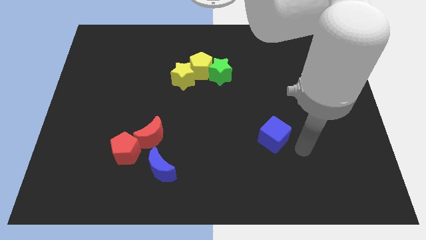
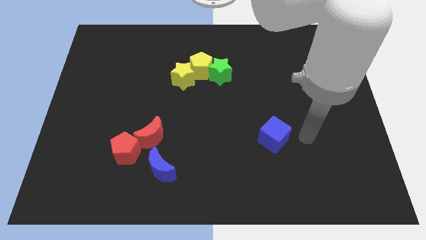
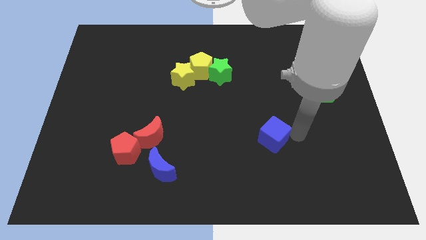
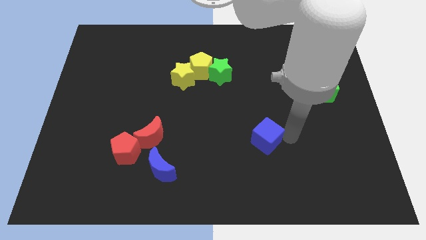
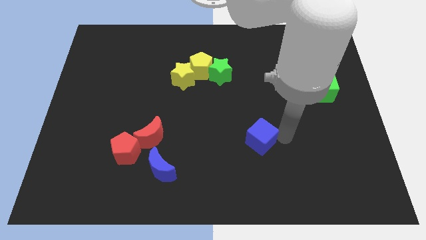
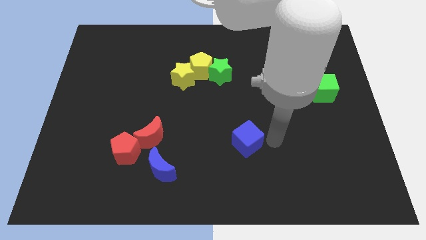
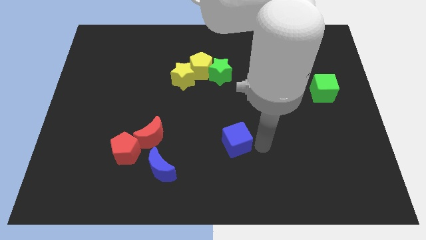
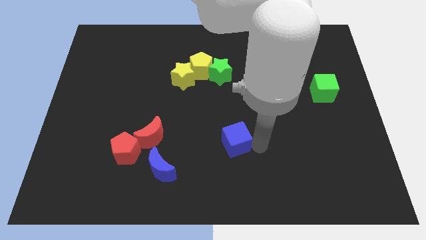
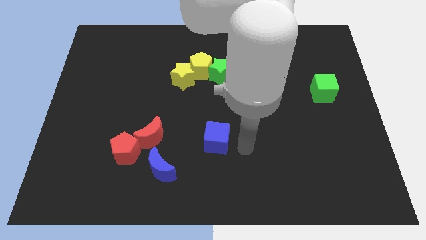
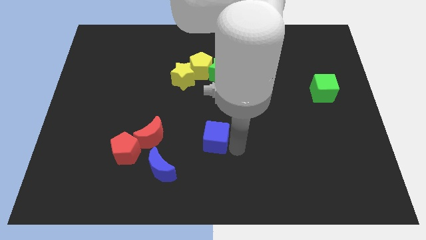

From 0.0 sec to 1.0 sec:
move the blue cube to the bottom of the green star

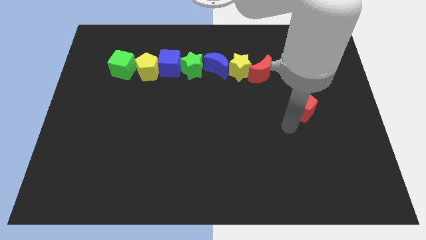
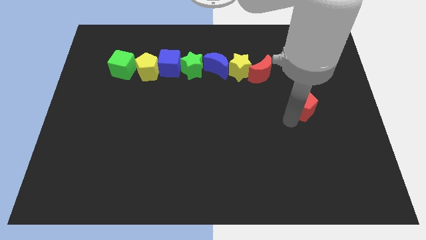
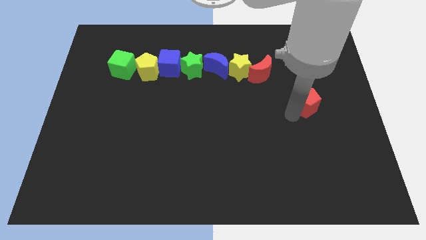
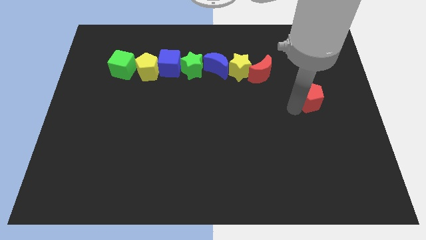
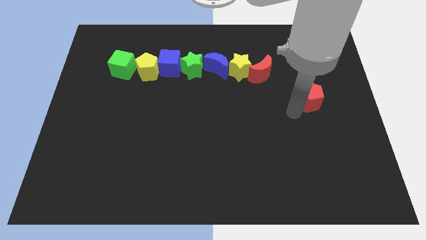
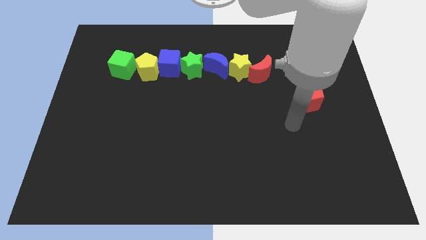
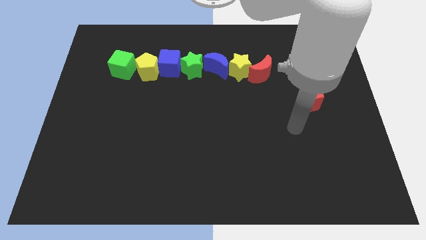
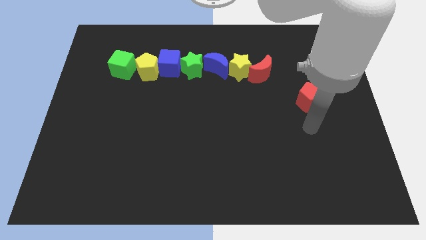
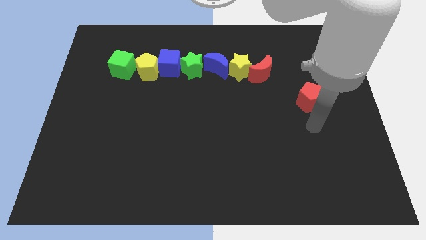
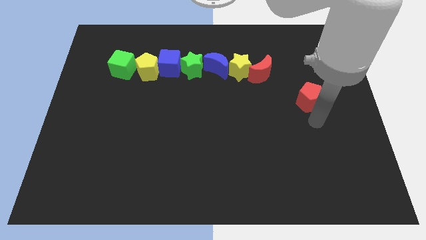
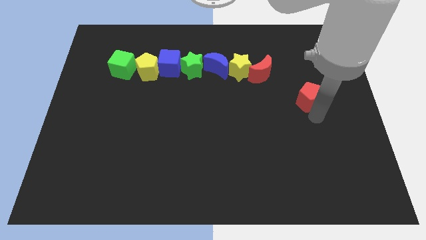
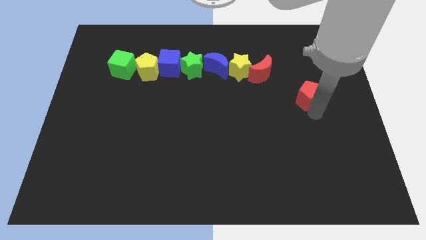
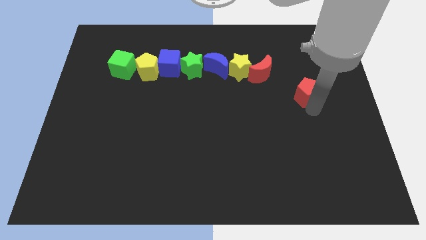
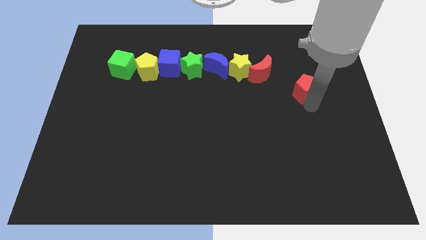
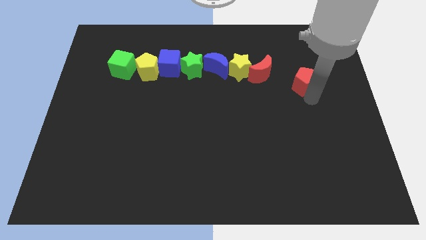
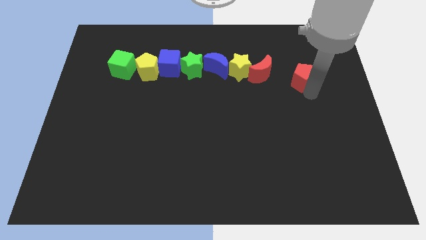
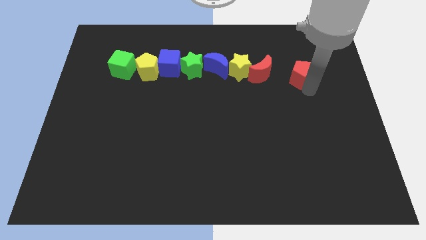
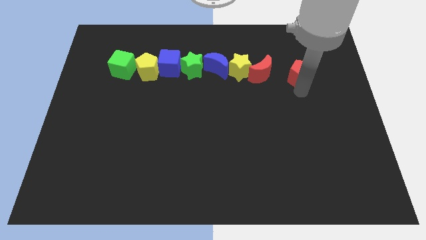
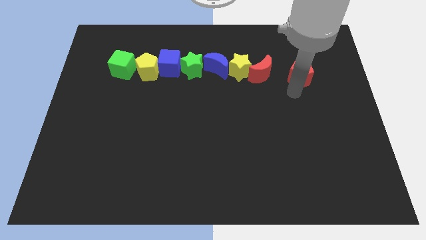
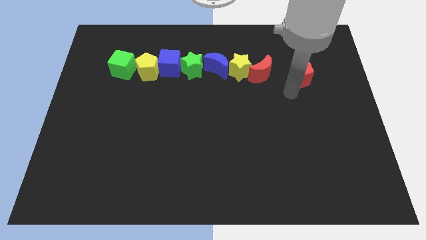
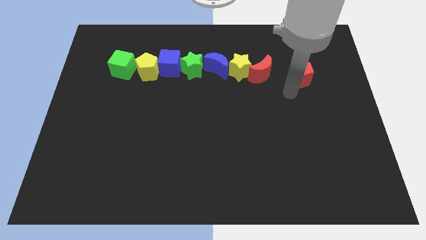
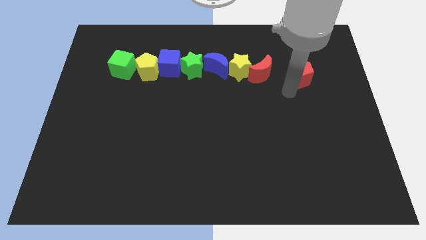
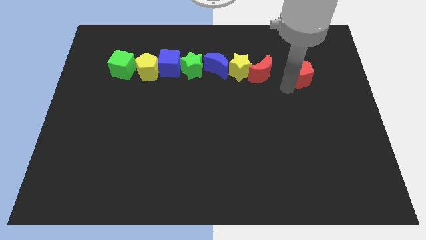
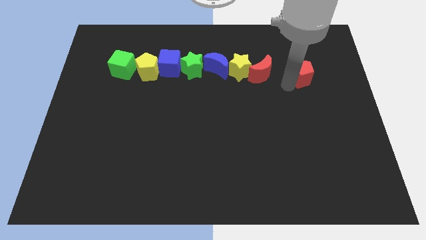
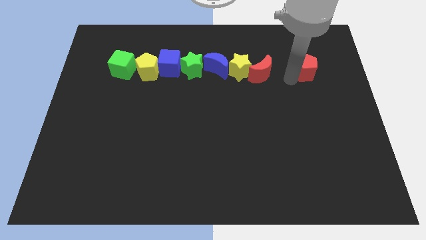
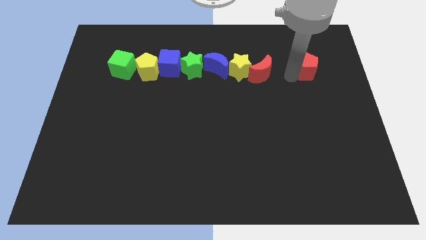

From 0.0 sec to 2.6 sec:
place the red pentagon right to the red moon

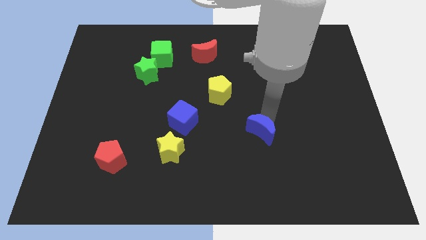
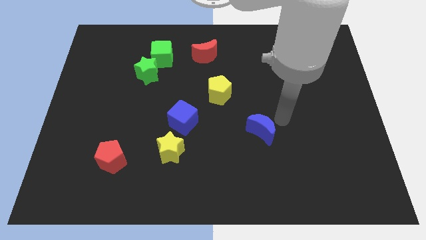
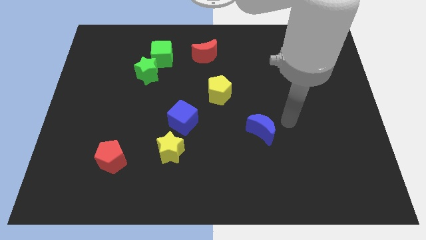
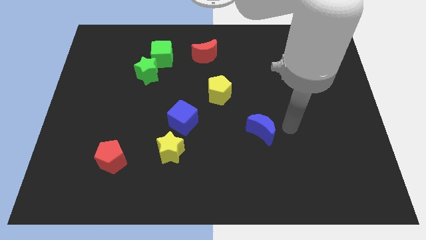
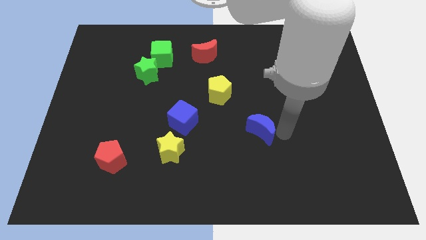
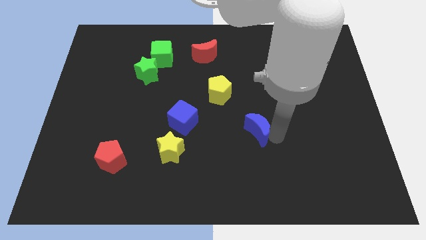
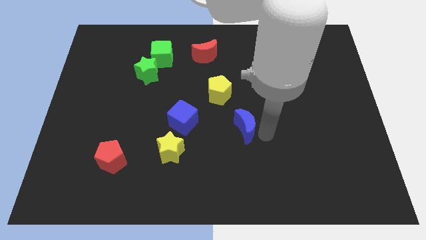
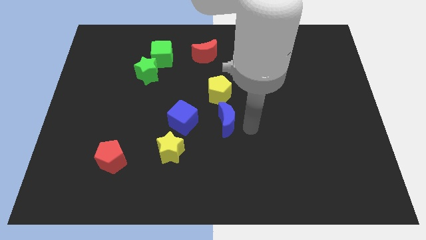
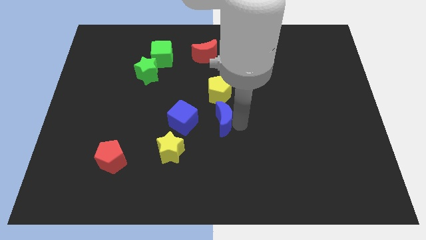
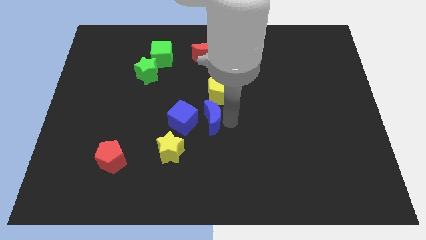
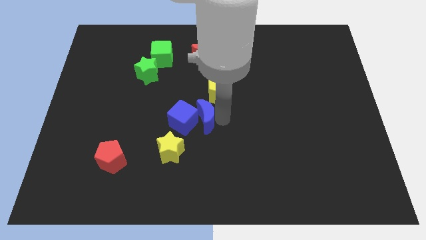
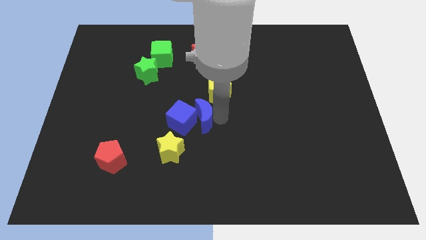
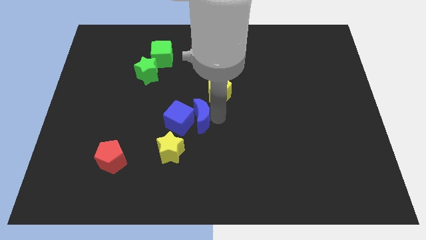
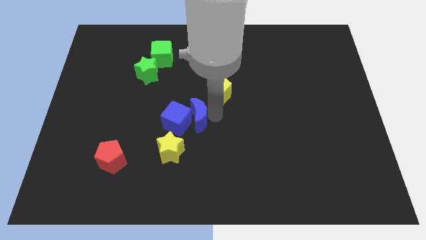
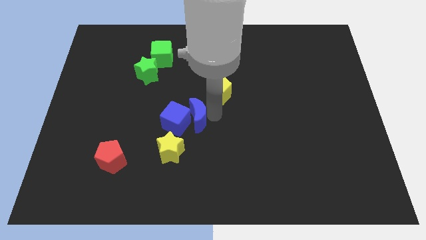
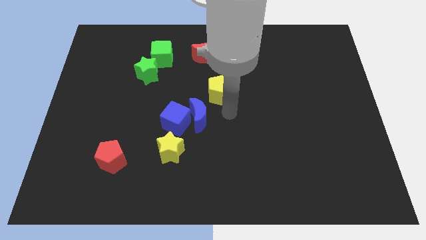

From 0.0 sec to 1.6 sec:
push the blue crescent towards the right side of the blue cube

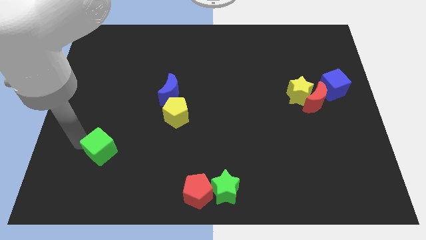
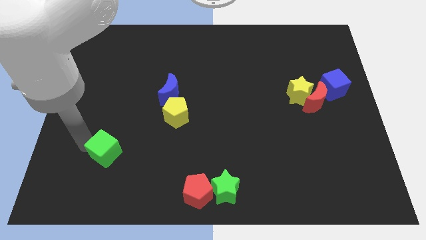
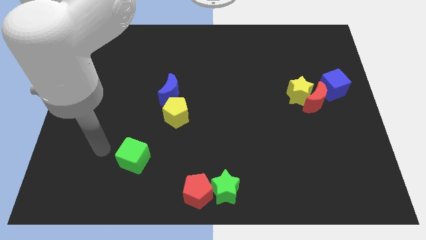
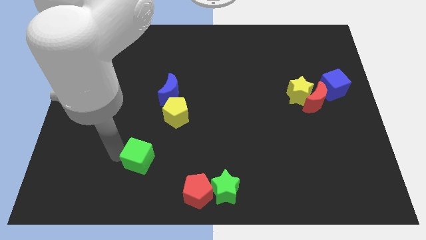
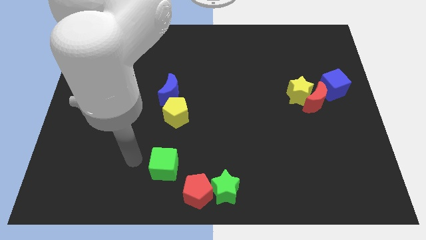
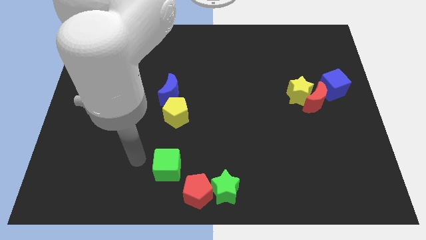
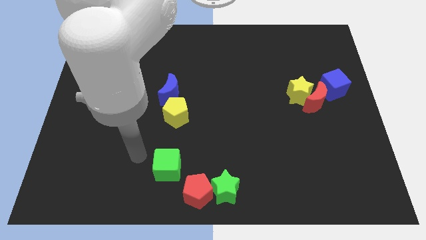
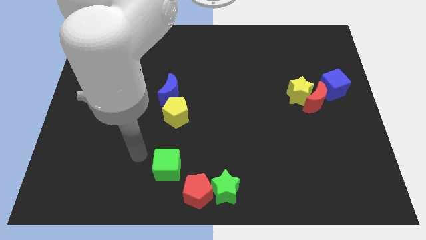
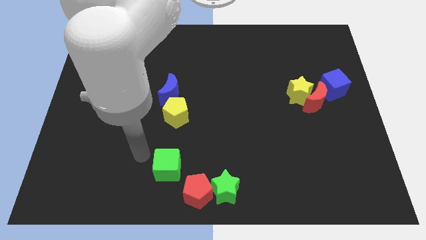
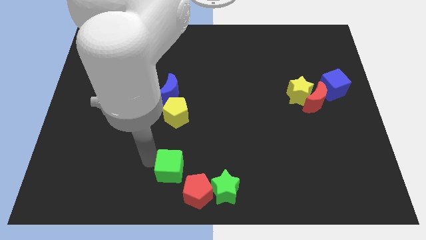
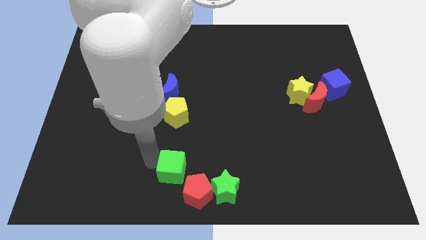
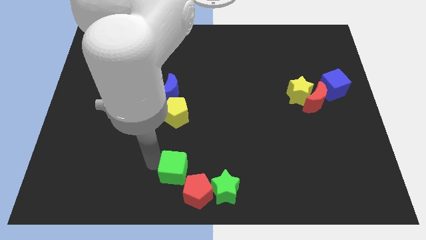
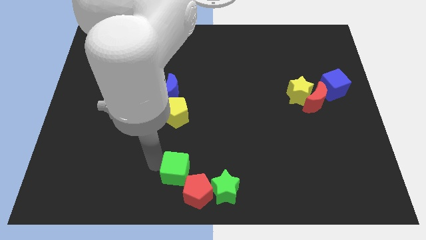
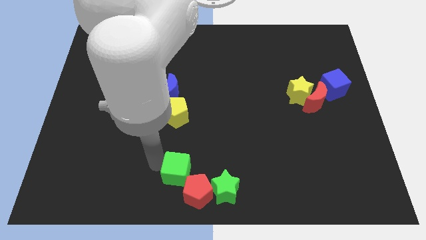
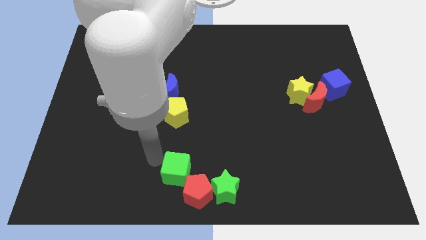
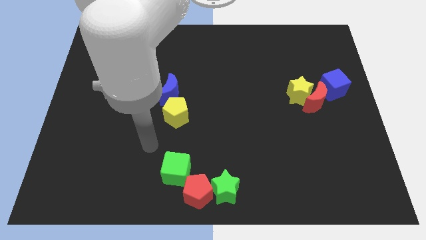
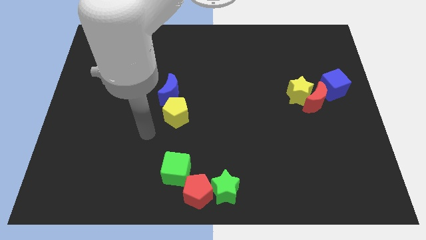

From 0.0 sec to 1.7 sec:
push the green cube into the red pentagon

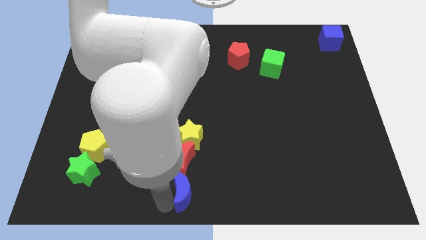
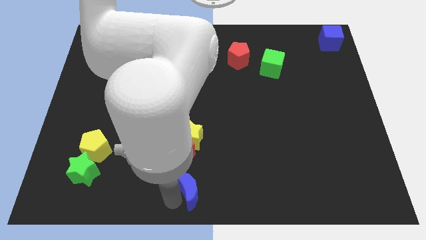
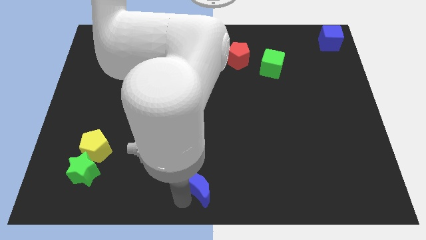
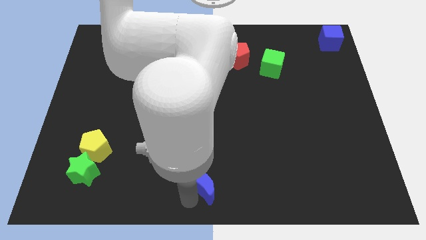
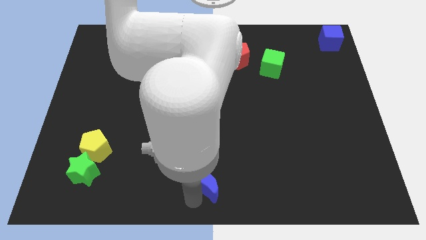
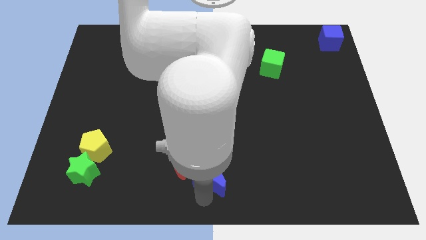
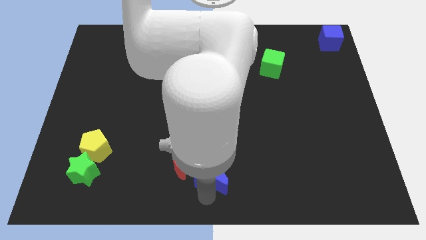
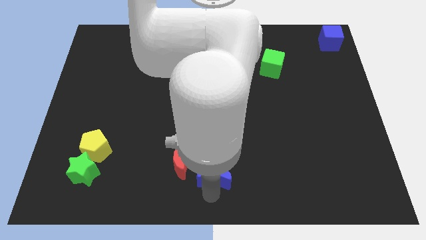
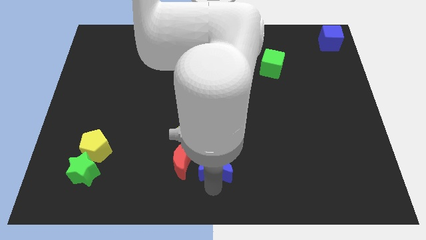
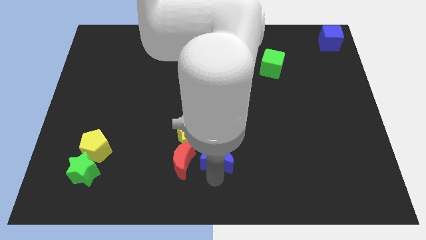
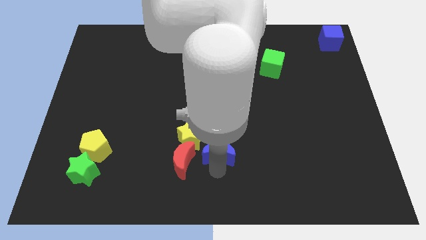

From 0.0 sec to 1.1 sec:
separate blue moon from red moon

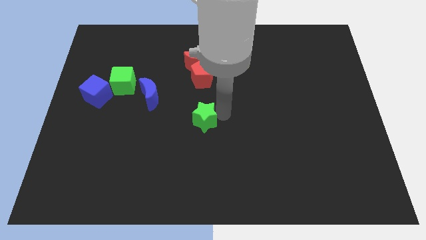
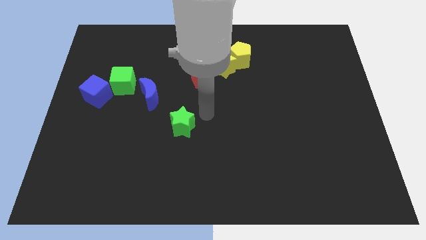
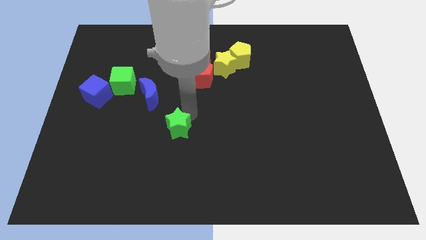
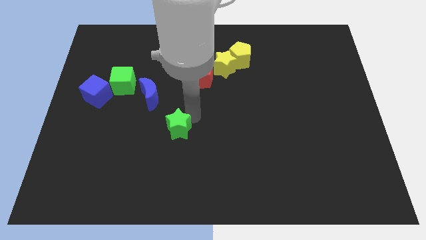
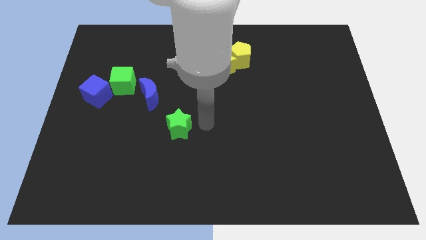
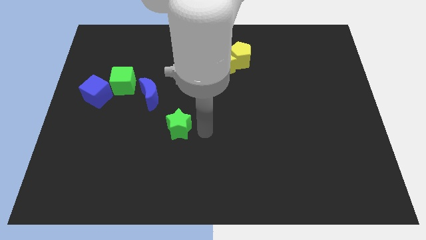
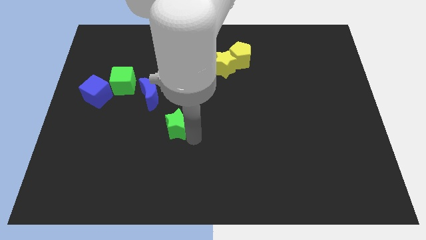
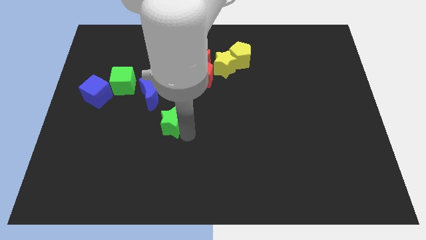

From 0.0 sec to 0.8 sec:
place the green star diagonally to blue moon

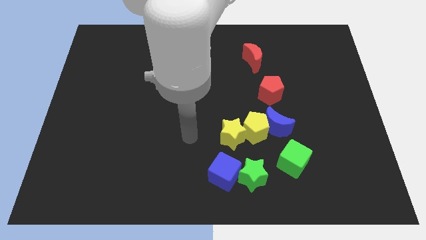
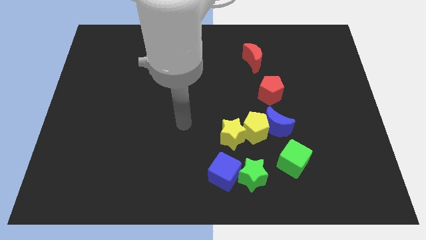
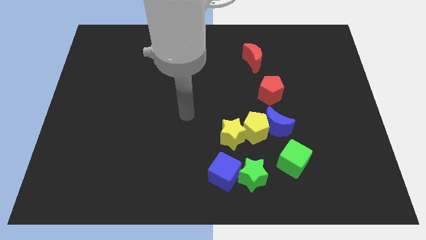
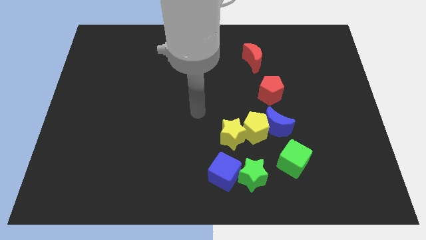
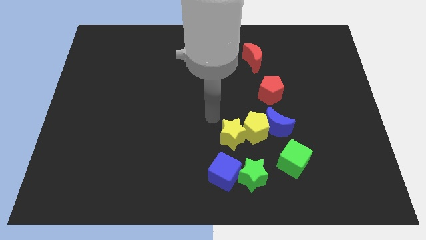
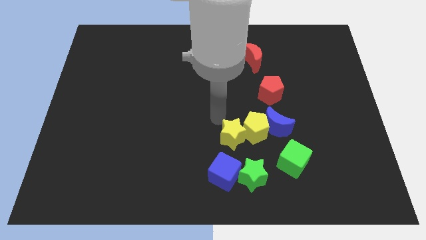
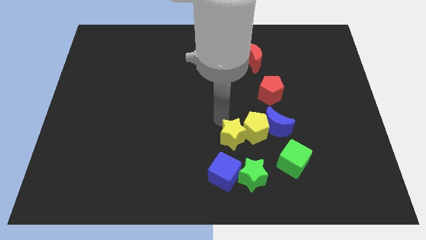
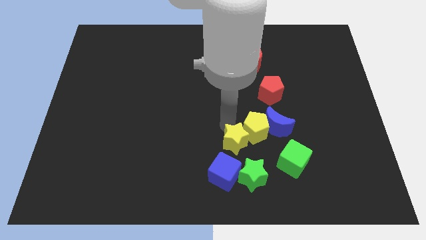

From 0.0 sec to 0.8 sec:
point your arm to the top left of the yellow star
